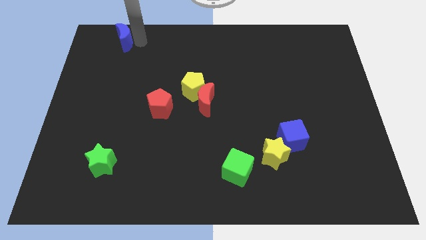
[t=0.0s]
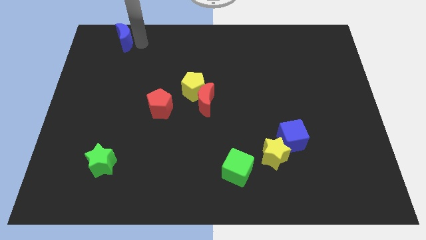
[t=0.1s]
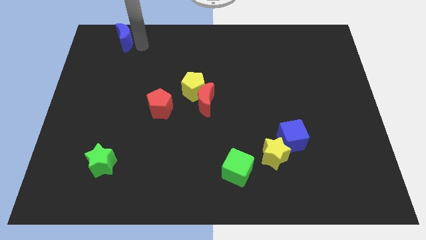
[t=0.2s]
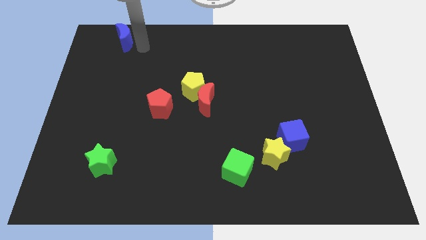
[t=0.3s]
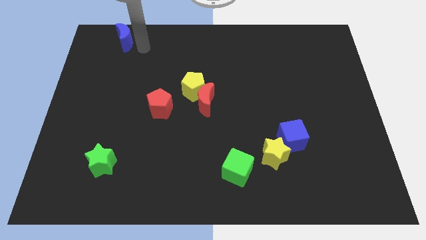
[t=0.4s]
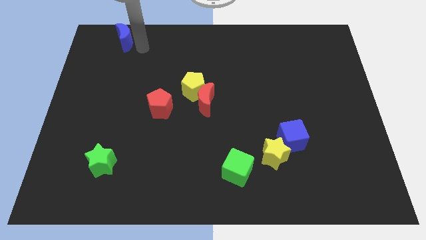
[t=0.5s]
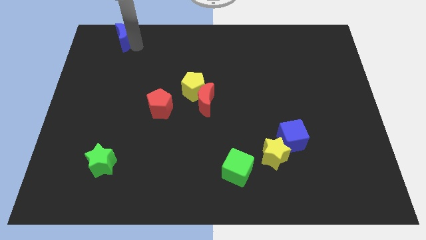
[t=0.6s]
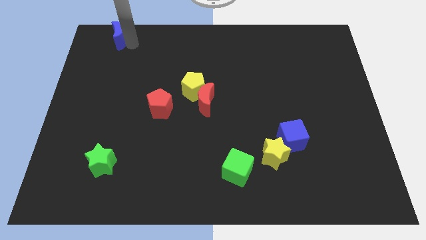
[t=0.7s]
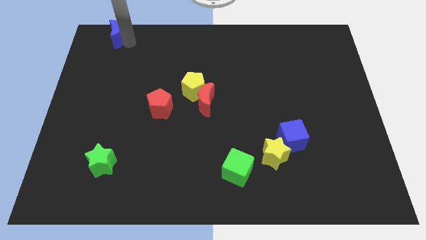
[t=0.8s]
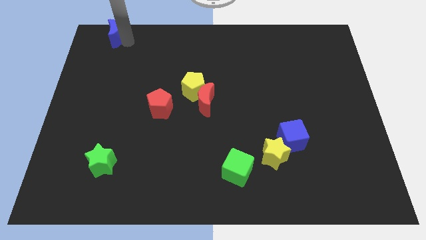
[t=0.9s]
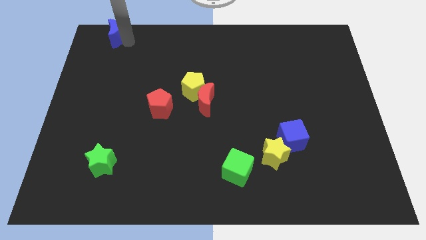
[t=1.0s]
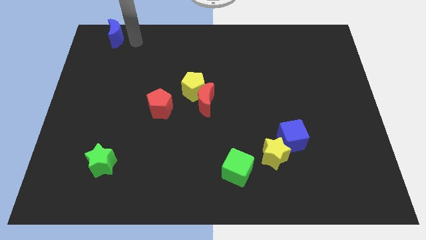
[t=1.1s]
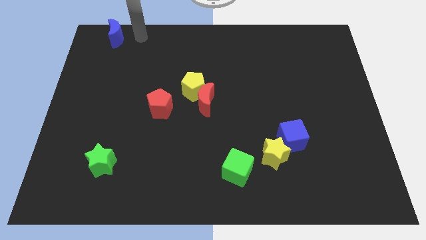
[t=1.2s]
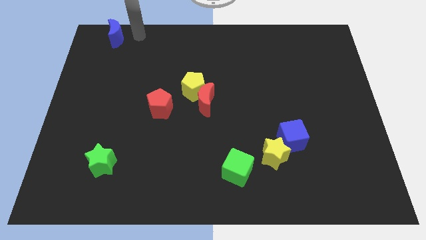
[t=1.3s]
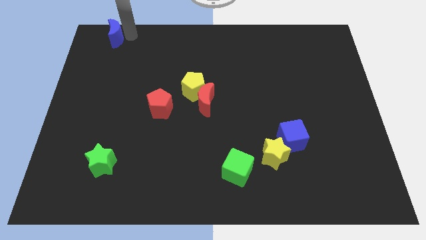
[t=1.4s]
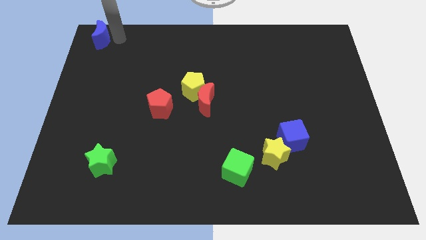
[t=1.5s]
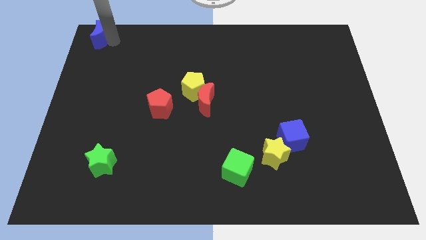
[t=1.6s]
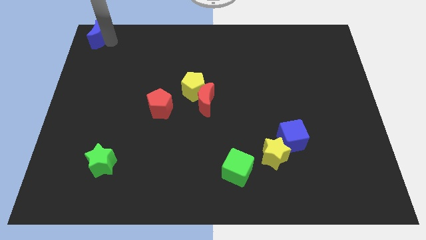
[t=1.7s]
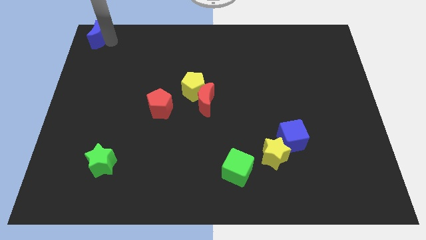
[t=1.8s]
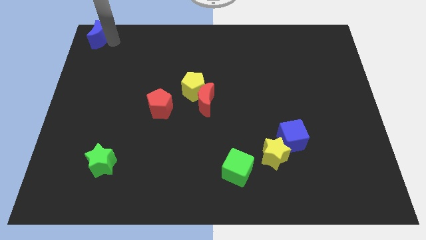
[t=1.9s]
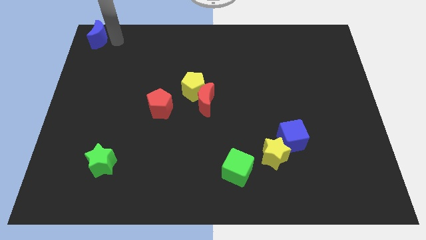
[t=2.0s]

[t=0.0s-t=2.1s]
move blue moon towards top left of the board

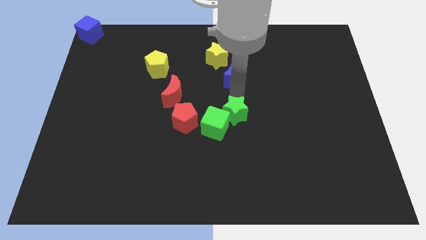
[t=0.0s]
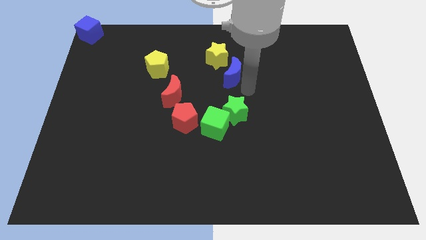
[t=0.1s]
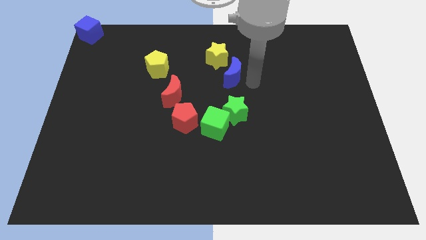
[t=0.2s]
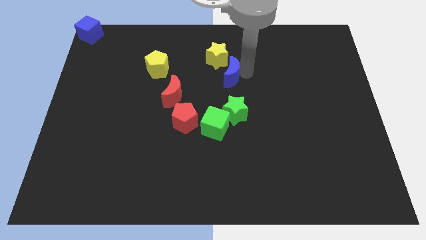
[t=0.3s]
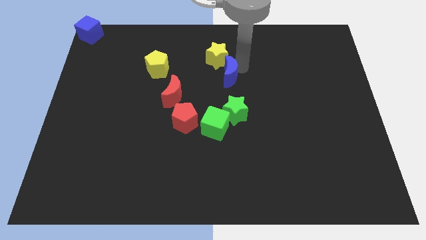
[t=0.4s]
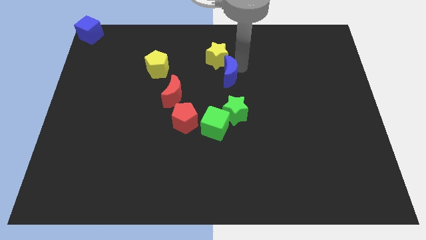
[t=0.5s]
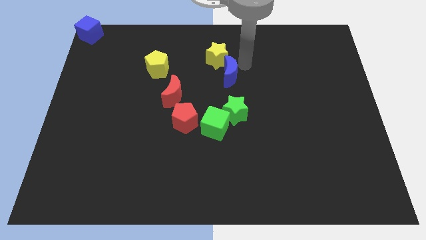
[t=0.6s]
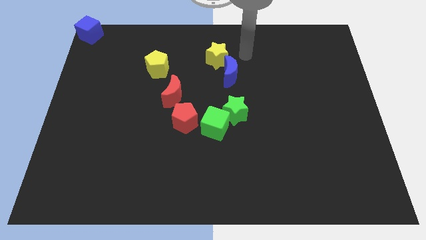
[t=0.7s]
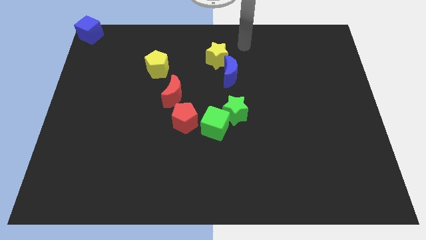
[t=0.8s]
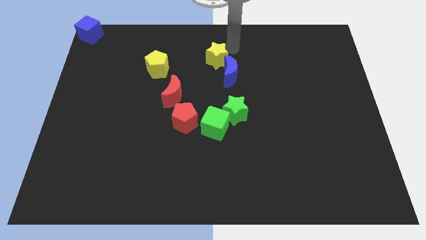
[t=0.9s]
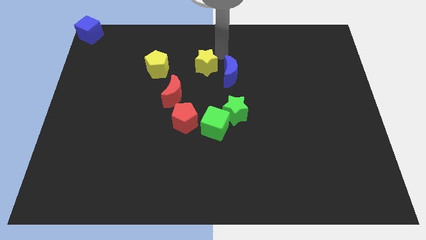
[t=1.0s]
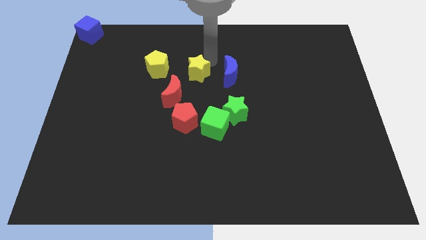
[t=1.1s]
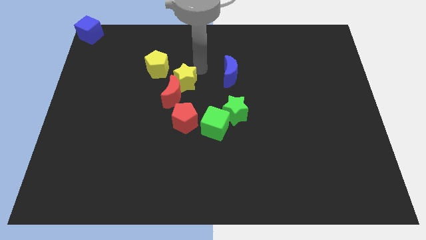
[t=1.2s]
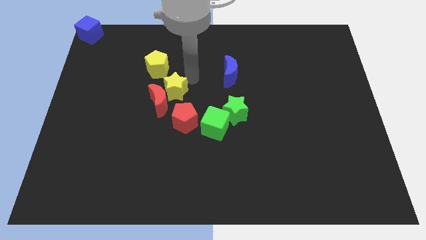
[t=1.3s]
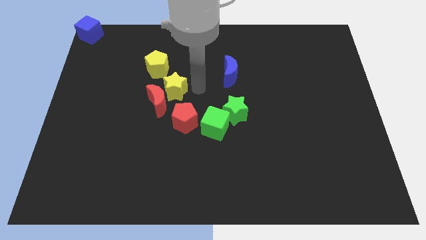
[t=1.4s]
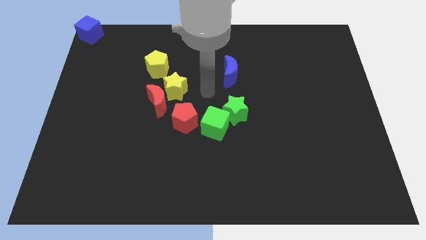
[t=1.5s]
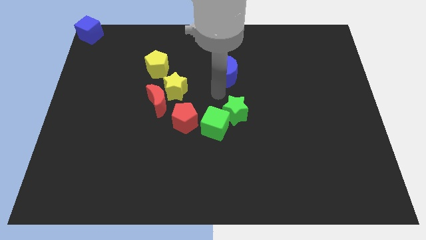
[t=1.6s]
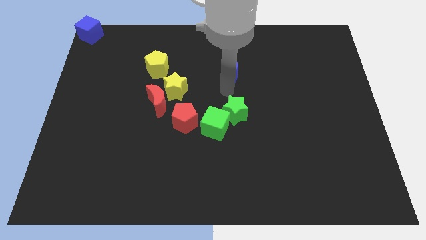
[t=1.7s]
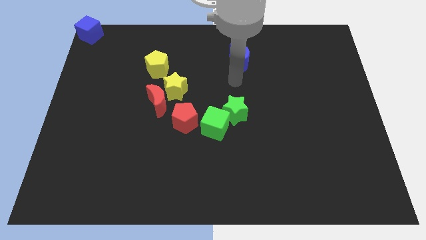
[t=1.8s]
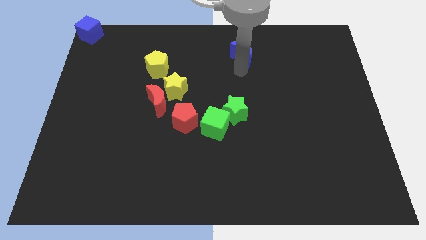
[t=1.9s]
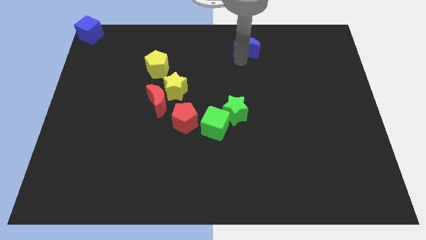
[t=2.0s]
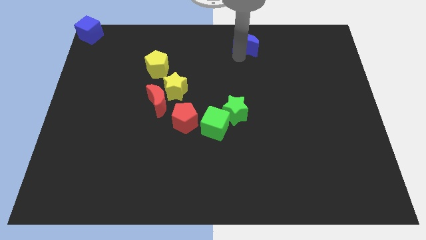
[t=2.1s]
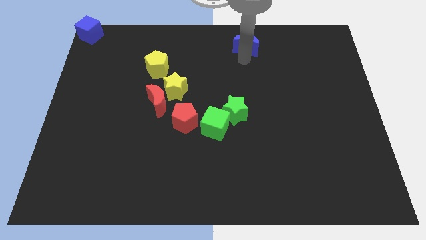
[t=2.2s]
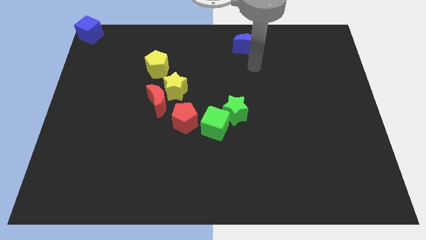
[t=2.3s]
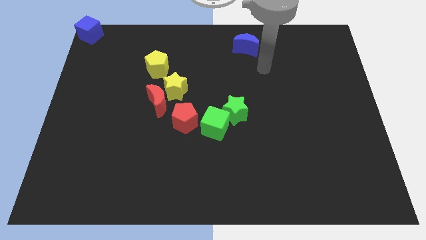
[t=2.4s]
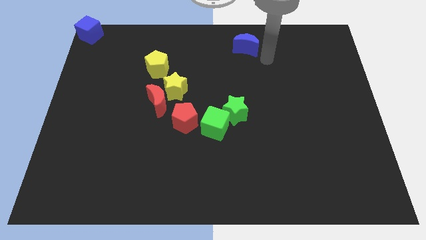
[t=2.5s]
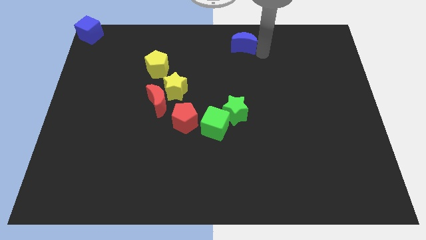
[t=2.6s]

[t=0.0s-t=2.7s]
slightly push the blue moon towards the top

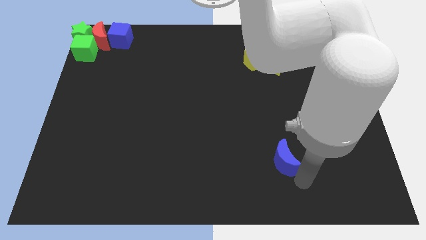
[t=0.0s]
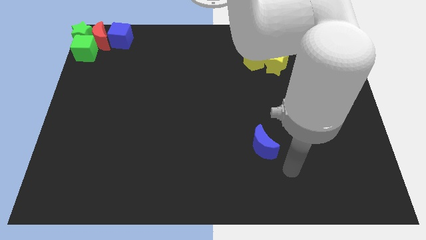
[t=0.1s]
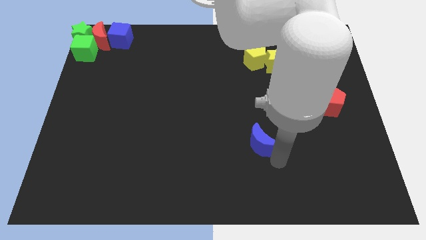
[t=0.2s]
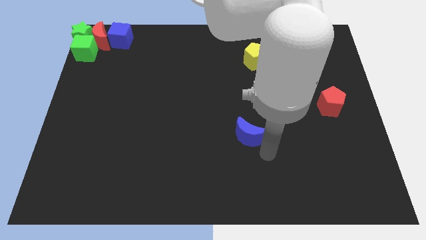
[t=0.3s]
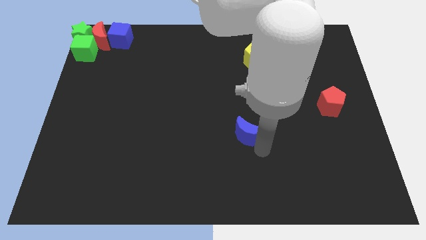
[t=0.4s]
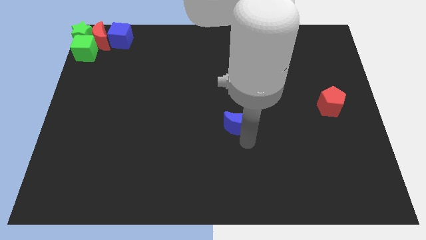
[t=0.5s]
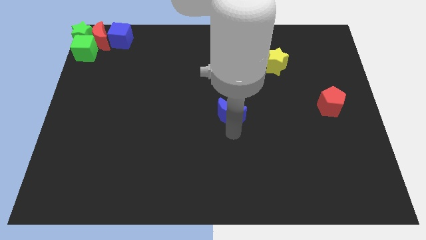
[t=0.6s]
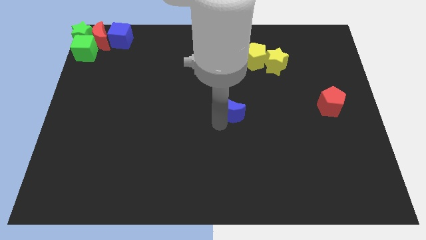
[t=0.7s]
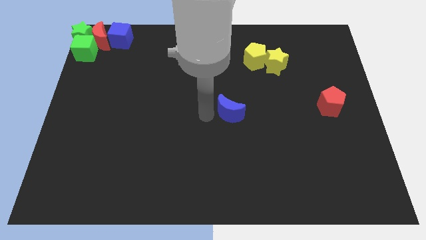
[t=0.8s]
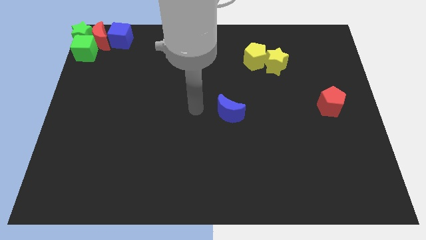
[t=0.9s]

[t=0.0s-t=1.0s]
push the blue crescent to the center of the board

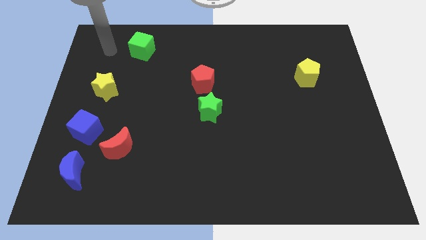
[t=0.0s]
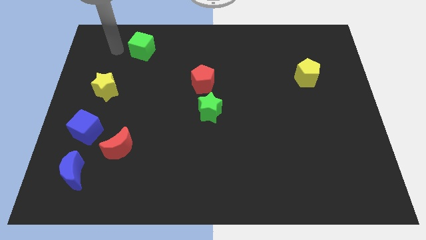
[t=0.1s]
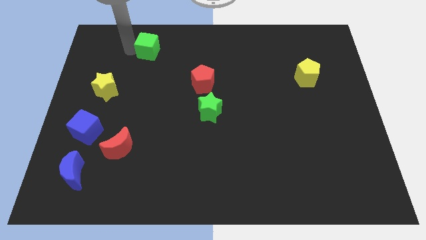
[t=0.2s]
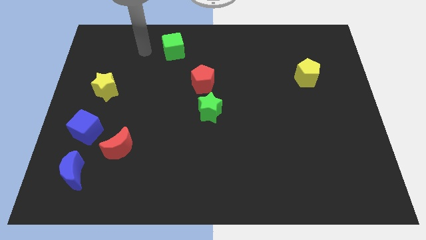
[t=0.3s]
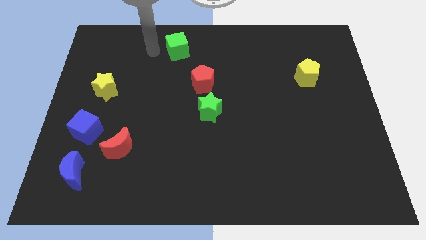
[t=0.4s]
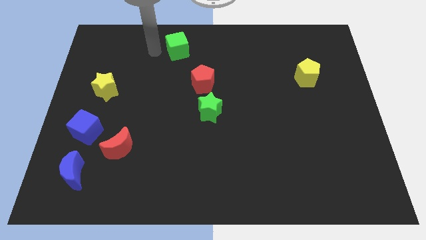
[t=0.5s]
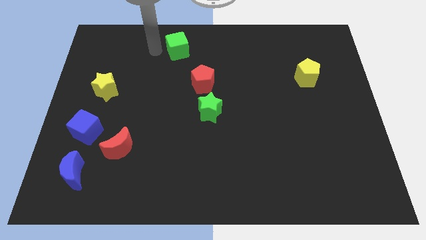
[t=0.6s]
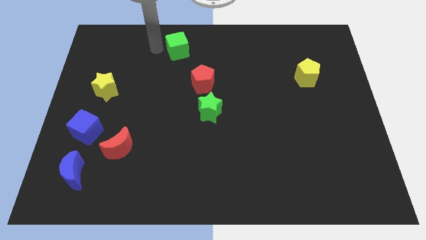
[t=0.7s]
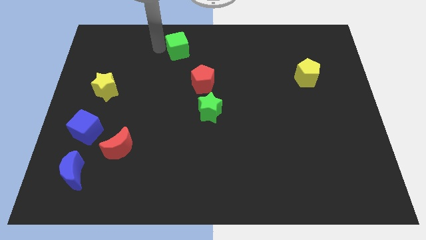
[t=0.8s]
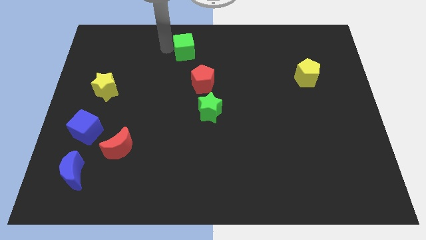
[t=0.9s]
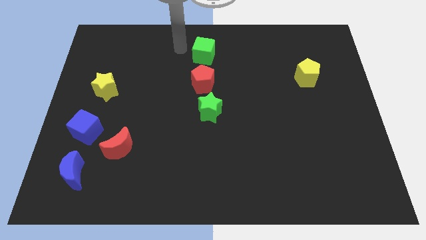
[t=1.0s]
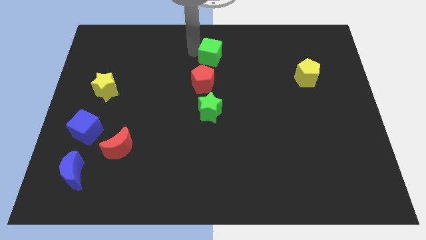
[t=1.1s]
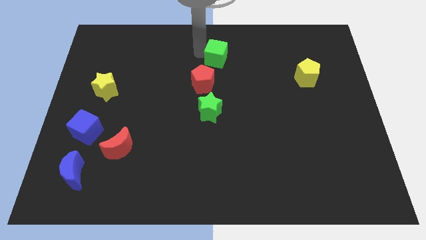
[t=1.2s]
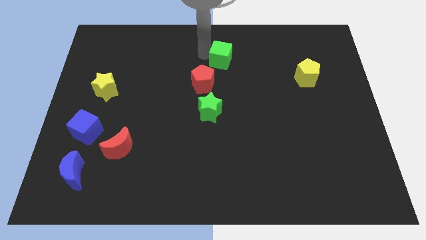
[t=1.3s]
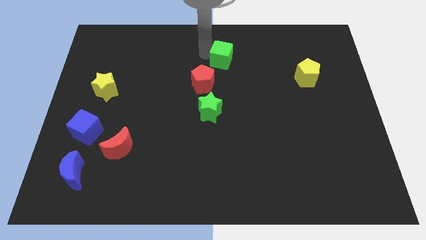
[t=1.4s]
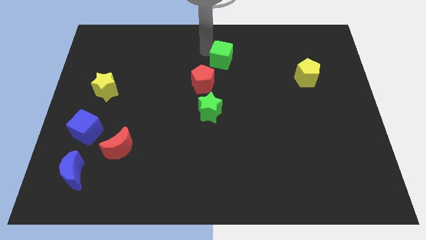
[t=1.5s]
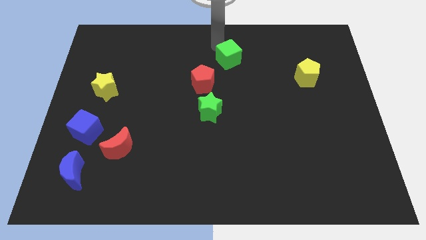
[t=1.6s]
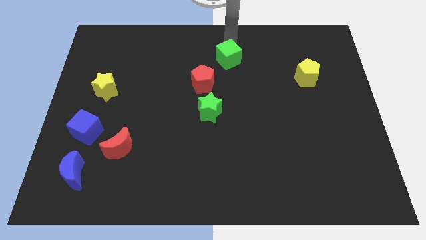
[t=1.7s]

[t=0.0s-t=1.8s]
push the green cube to the top right of the red pentagon

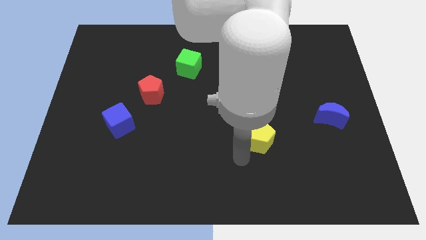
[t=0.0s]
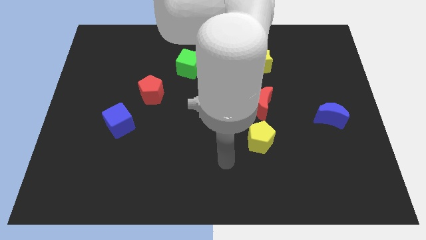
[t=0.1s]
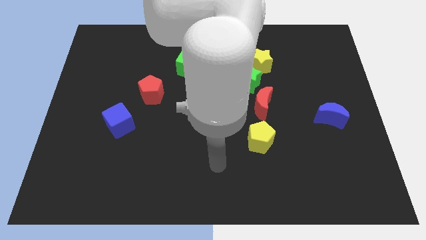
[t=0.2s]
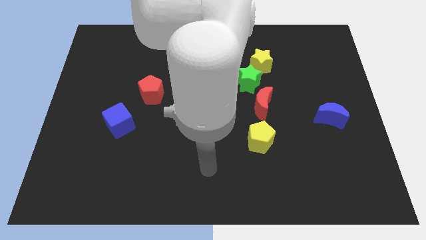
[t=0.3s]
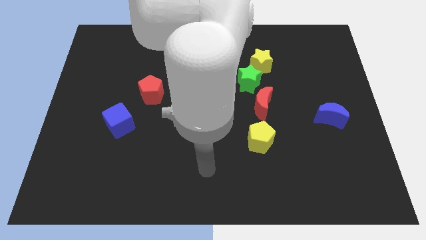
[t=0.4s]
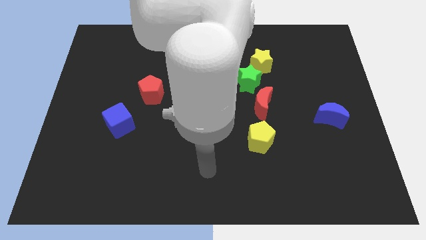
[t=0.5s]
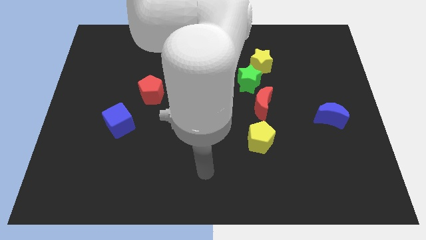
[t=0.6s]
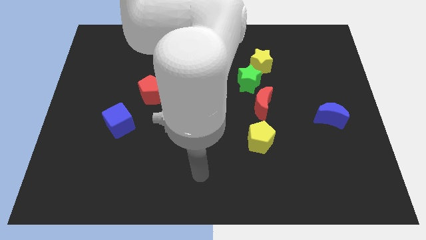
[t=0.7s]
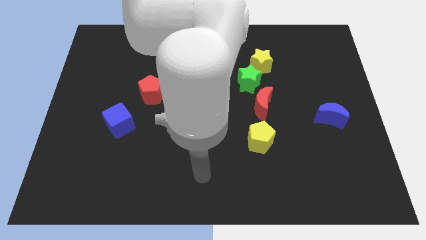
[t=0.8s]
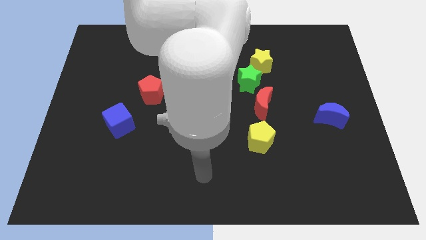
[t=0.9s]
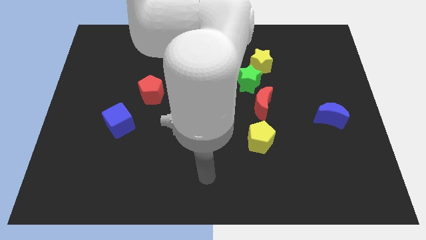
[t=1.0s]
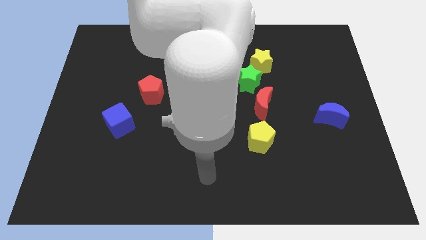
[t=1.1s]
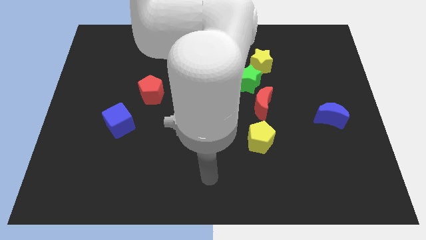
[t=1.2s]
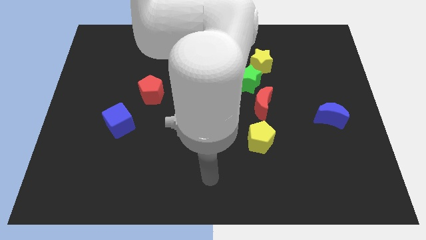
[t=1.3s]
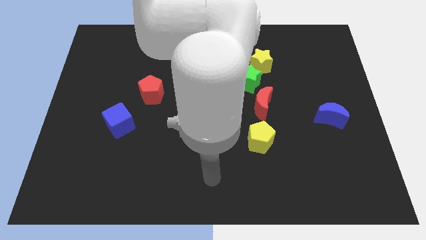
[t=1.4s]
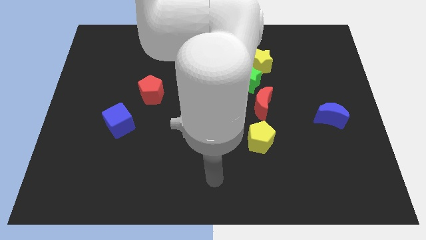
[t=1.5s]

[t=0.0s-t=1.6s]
move your arm away from the yellow pentagon
